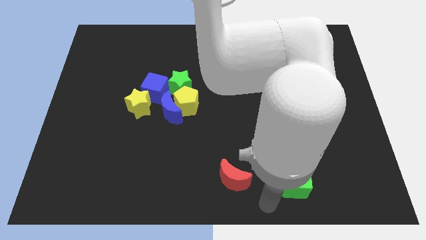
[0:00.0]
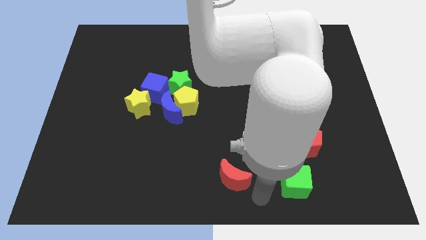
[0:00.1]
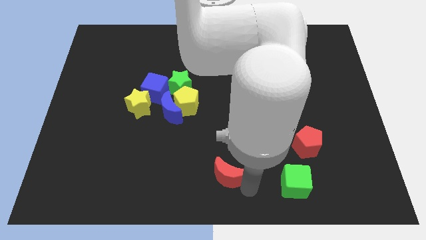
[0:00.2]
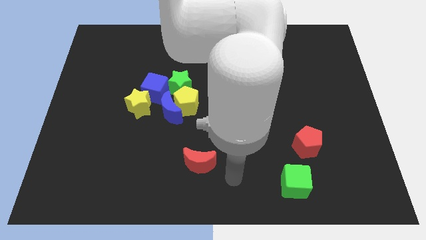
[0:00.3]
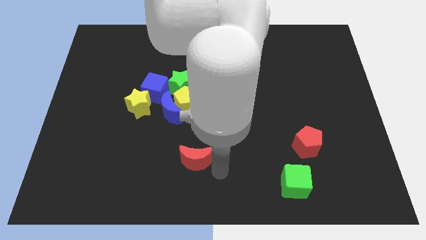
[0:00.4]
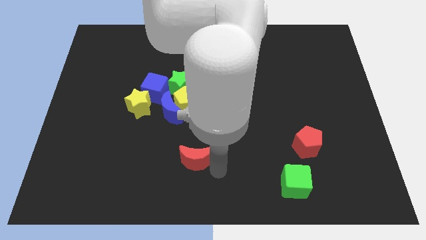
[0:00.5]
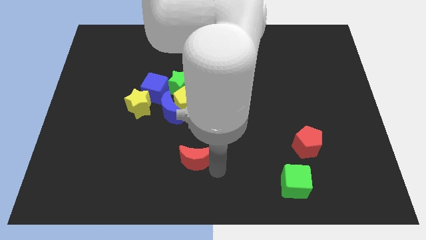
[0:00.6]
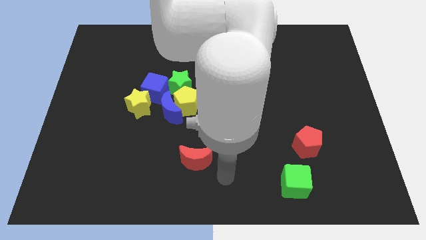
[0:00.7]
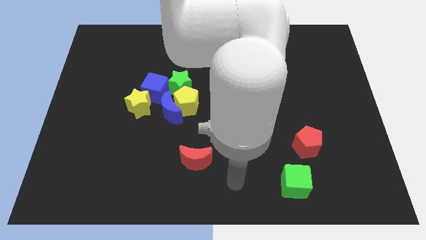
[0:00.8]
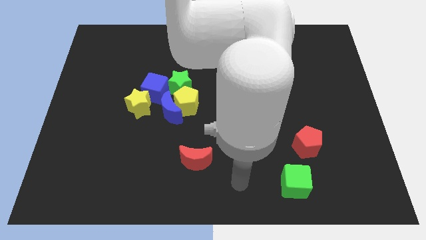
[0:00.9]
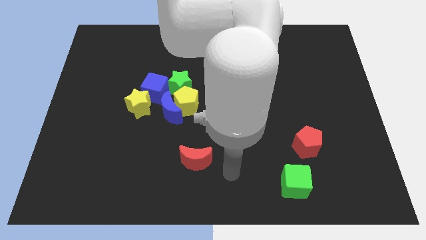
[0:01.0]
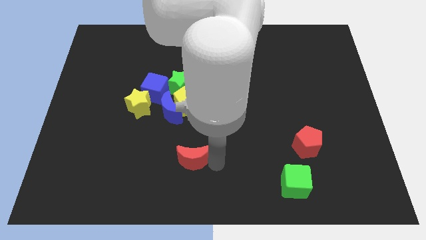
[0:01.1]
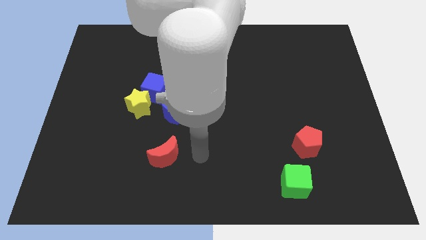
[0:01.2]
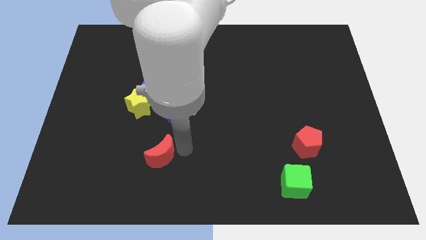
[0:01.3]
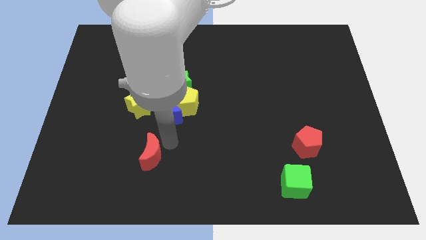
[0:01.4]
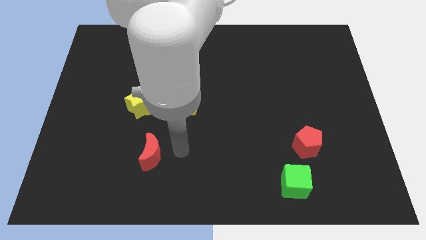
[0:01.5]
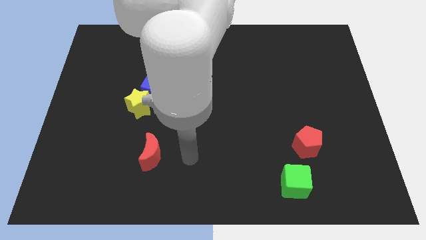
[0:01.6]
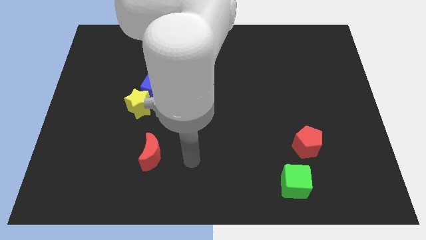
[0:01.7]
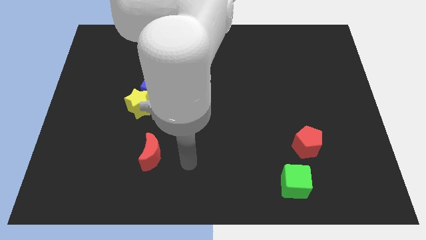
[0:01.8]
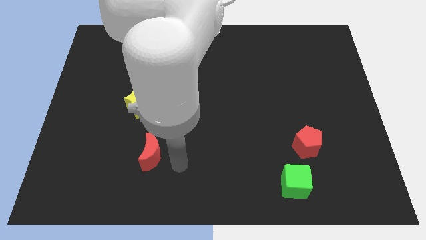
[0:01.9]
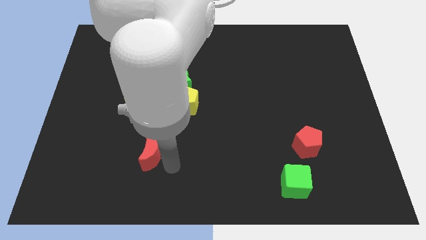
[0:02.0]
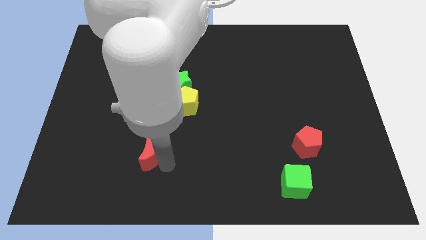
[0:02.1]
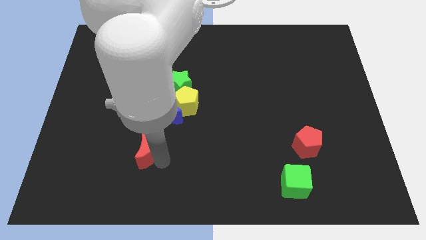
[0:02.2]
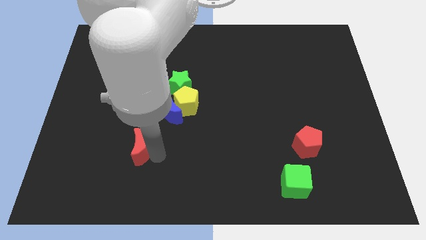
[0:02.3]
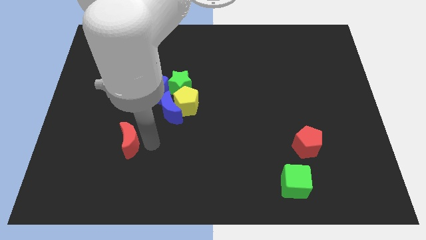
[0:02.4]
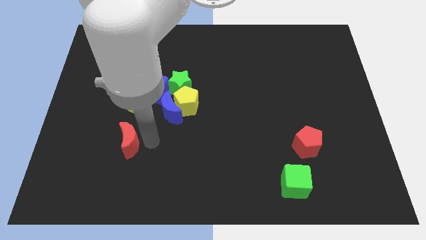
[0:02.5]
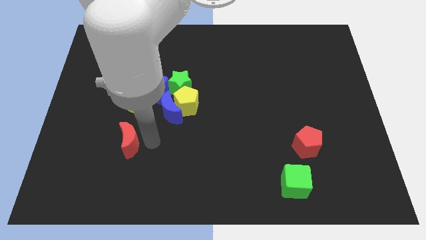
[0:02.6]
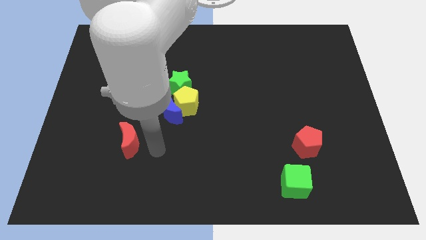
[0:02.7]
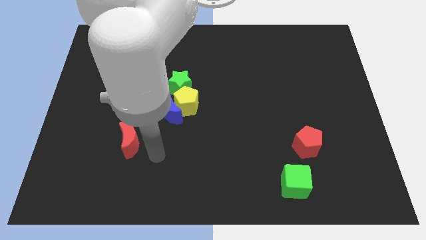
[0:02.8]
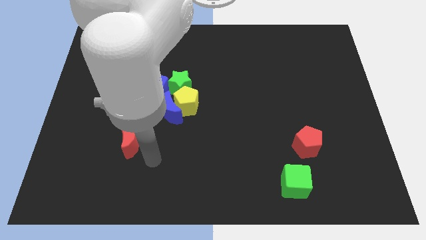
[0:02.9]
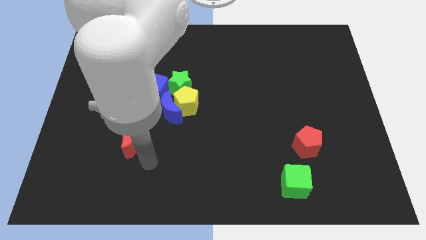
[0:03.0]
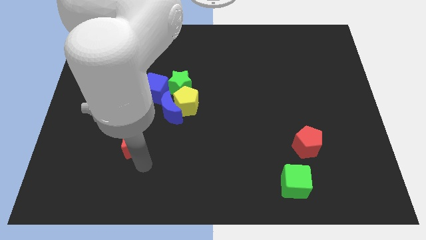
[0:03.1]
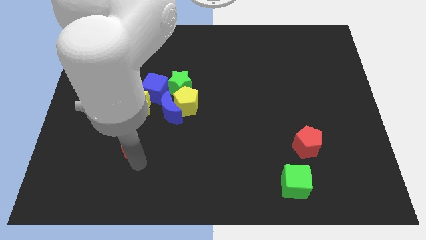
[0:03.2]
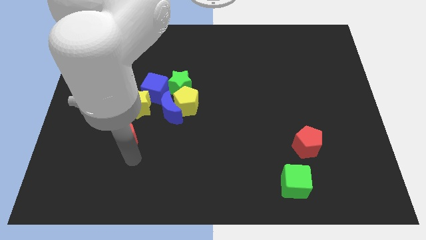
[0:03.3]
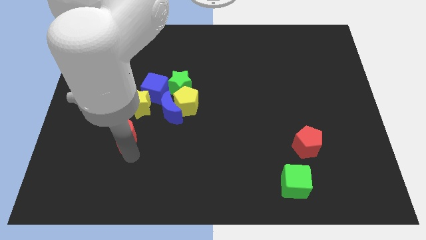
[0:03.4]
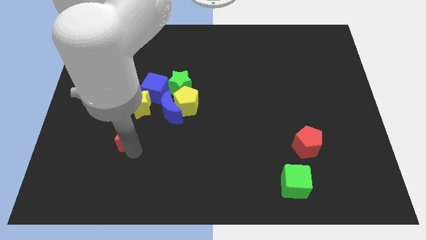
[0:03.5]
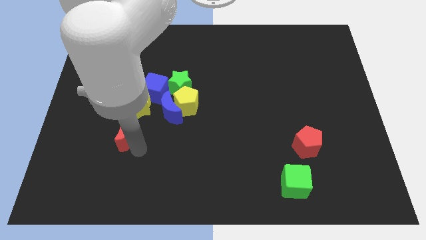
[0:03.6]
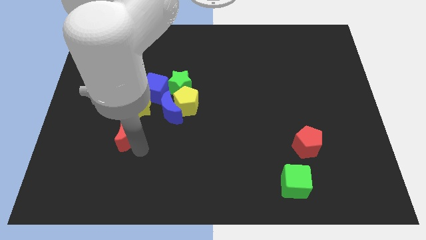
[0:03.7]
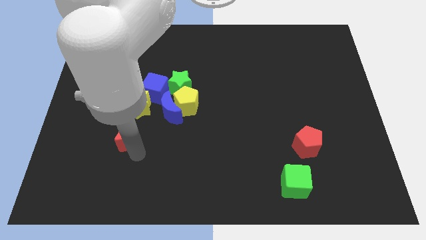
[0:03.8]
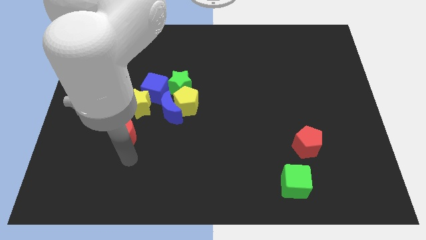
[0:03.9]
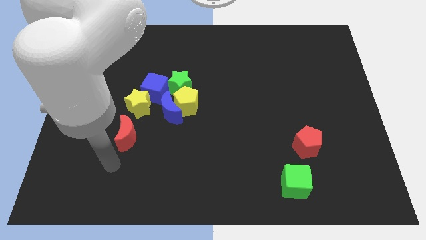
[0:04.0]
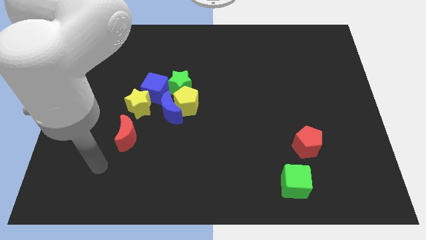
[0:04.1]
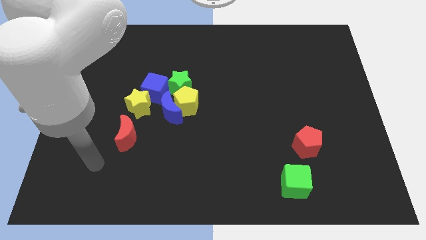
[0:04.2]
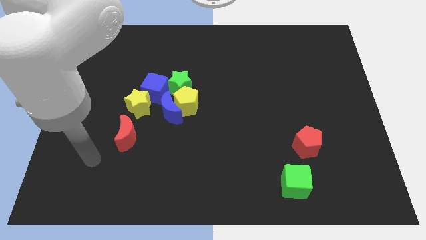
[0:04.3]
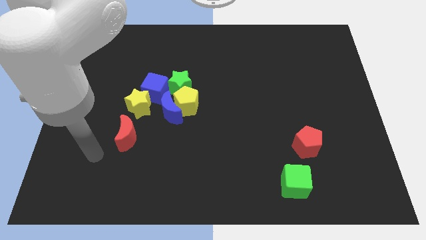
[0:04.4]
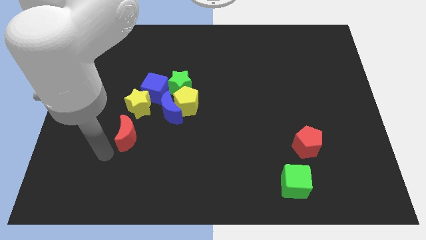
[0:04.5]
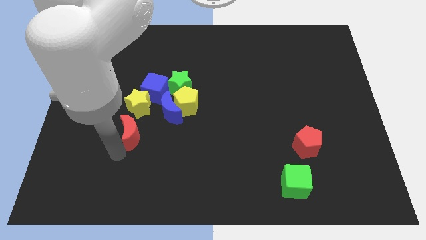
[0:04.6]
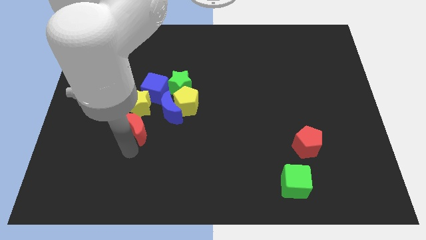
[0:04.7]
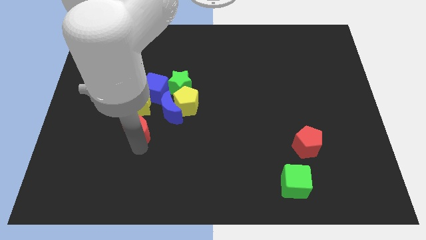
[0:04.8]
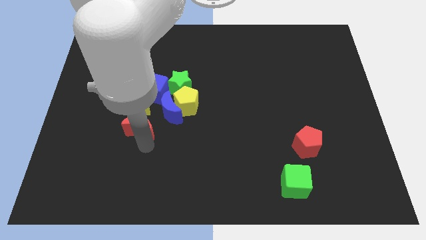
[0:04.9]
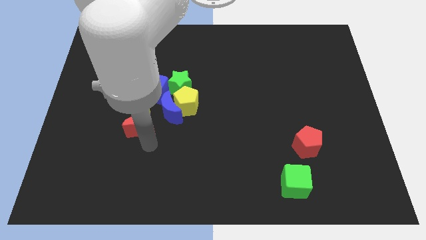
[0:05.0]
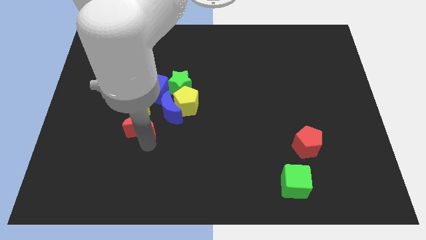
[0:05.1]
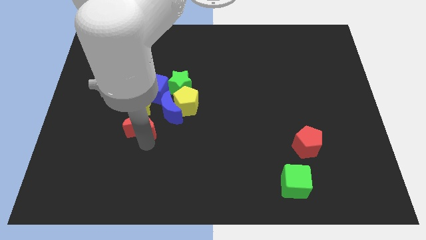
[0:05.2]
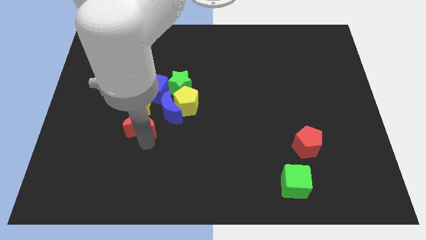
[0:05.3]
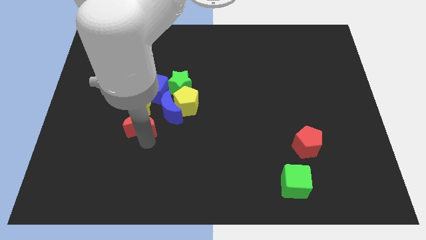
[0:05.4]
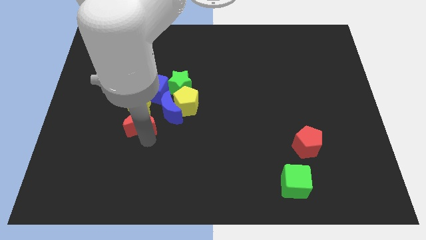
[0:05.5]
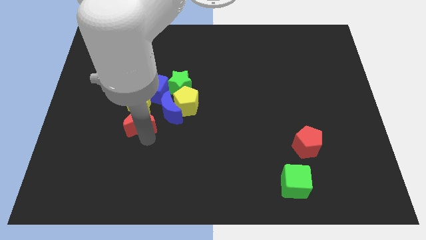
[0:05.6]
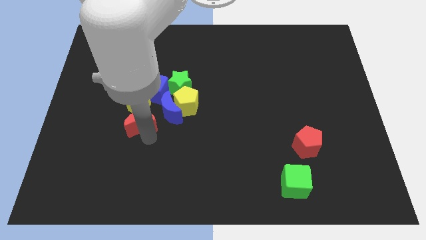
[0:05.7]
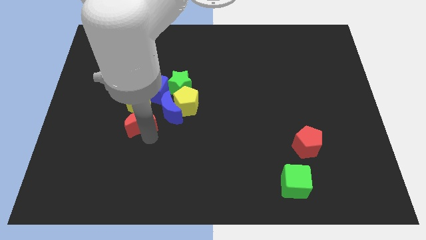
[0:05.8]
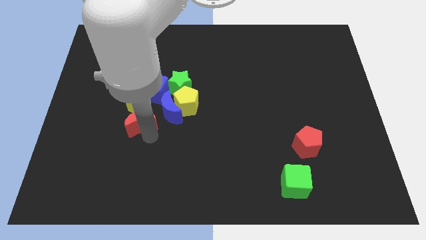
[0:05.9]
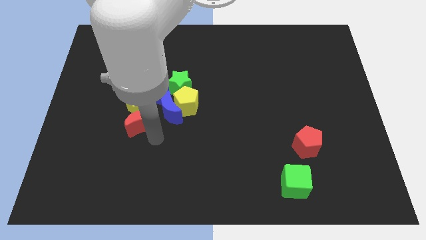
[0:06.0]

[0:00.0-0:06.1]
move the red crescent to the bottom of the yellow star

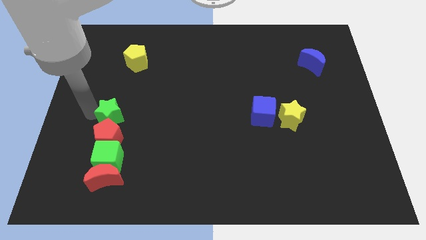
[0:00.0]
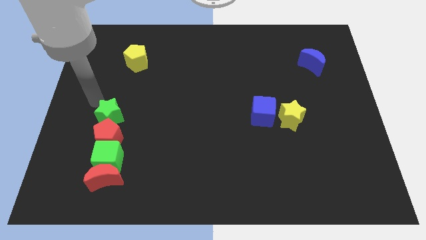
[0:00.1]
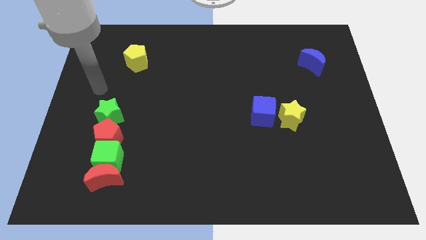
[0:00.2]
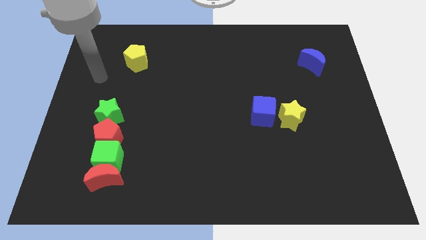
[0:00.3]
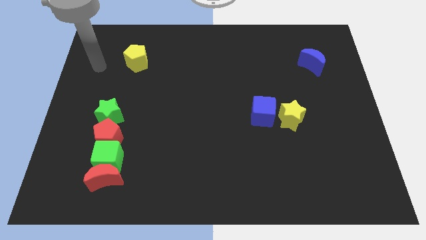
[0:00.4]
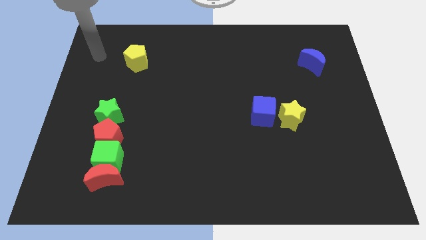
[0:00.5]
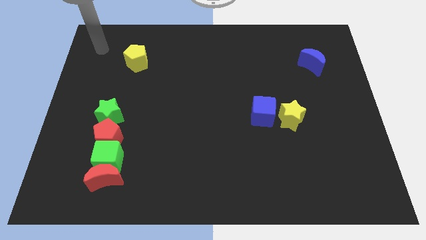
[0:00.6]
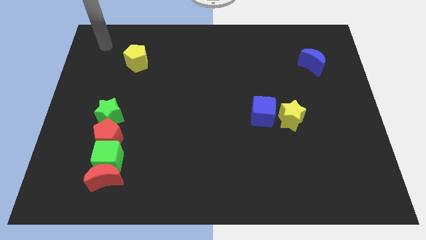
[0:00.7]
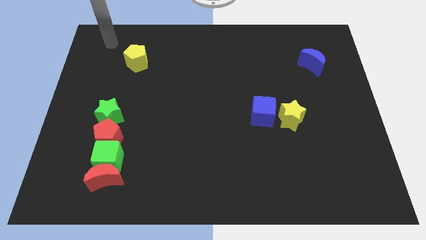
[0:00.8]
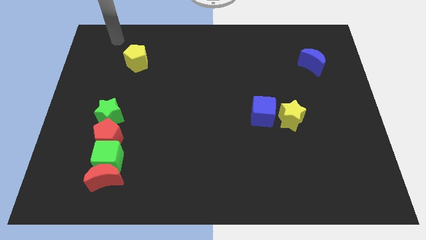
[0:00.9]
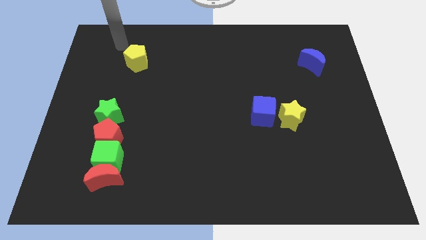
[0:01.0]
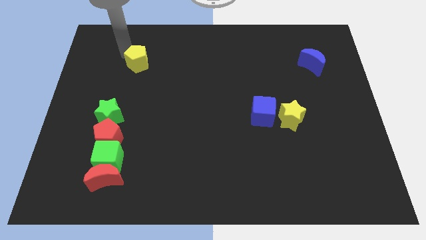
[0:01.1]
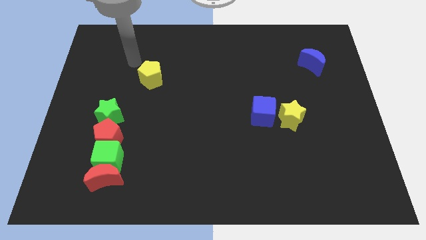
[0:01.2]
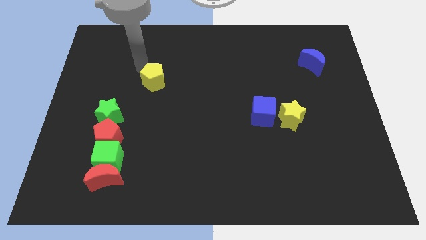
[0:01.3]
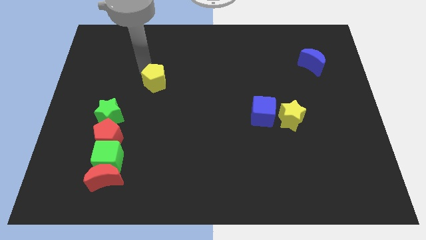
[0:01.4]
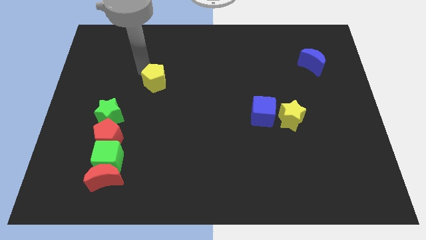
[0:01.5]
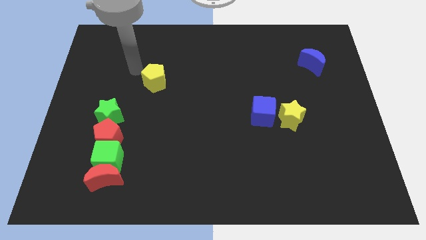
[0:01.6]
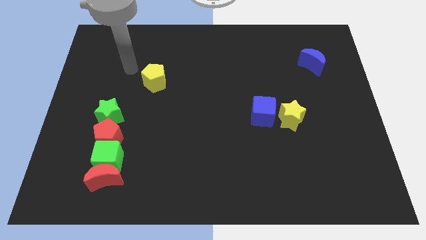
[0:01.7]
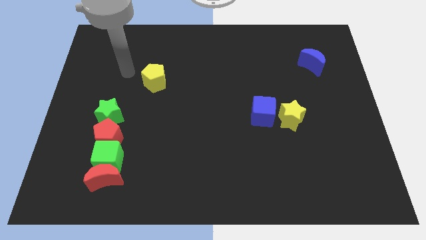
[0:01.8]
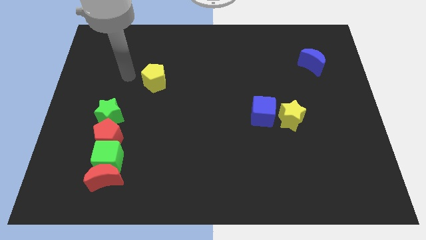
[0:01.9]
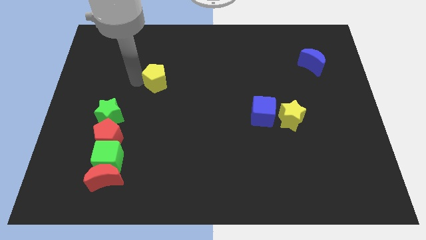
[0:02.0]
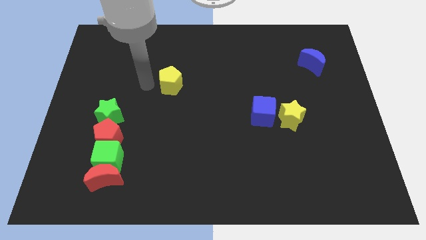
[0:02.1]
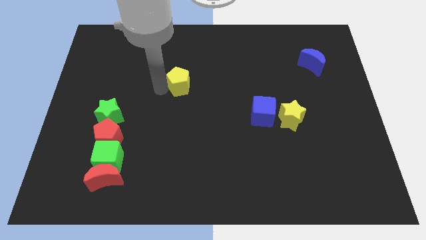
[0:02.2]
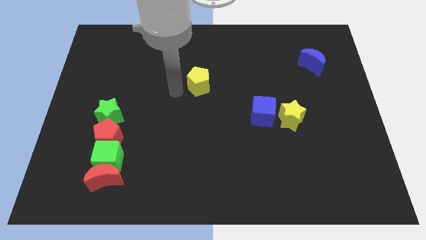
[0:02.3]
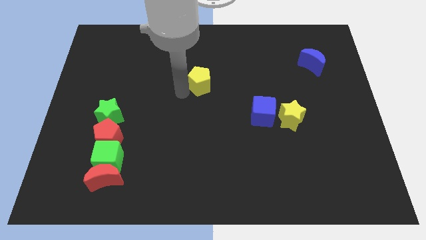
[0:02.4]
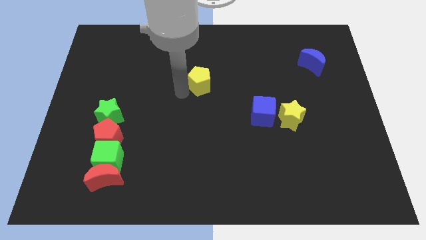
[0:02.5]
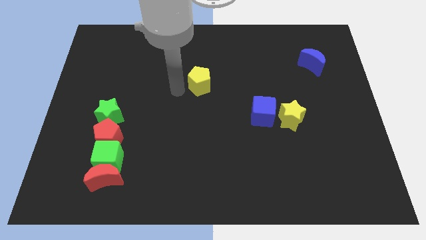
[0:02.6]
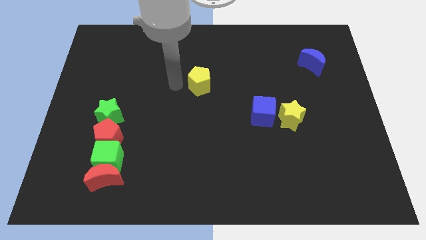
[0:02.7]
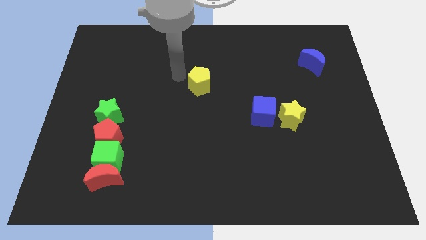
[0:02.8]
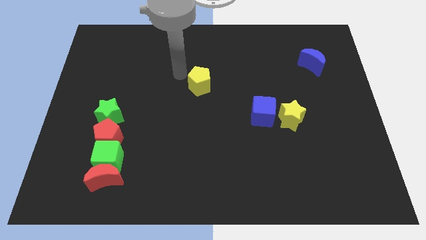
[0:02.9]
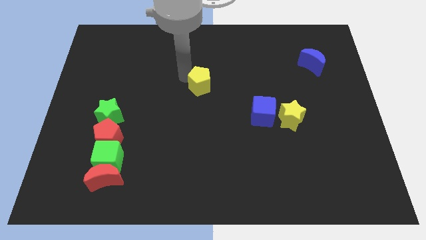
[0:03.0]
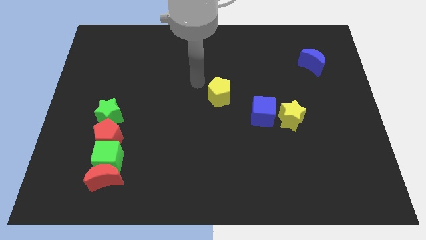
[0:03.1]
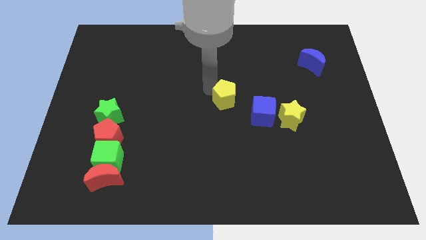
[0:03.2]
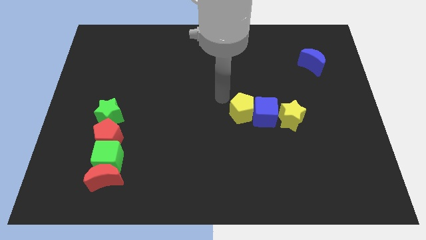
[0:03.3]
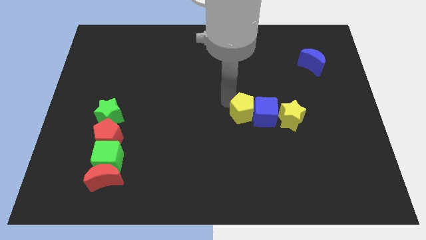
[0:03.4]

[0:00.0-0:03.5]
push the yellow pentagon into the left side of the blue cube
